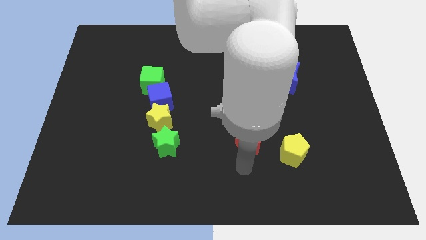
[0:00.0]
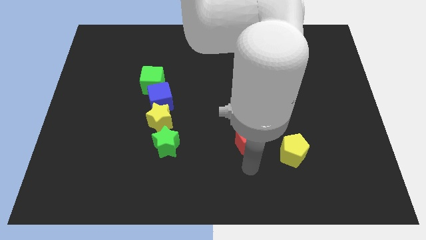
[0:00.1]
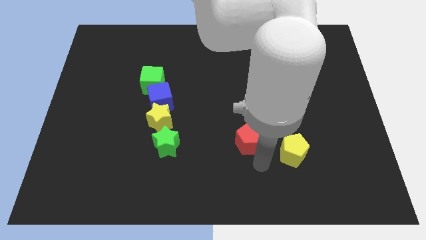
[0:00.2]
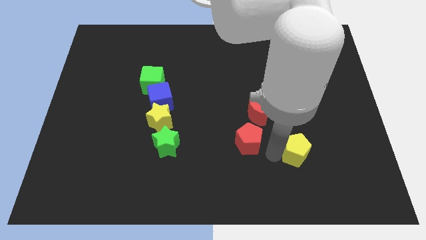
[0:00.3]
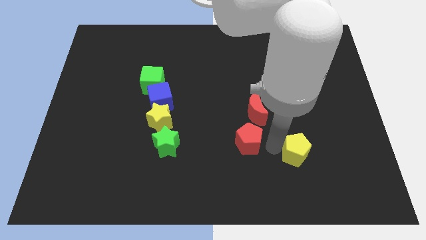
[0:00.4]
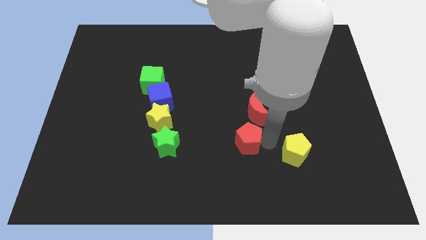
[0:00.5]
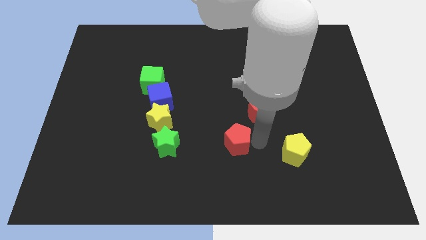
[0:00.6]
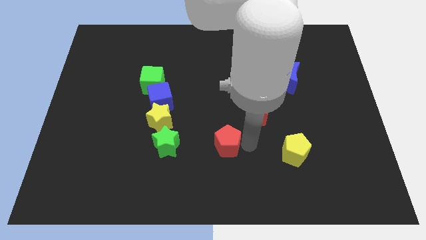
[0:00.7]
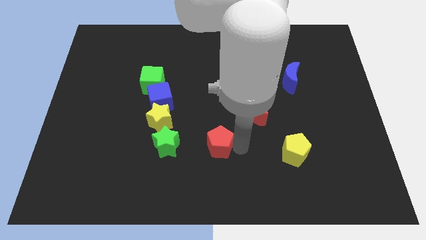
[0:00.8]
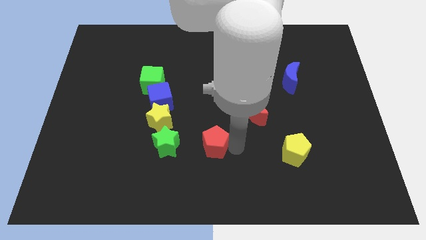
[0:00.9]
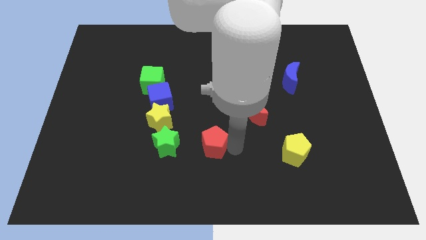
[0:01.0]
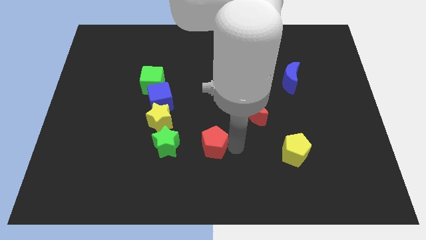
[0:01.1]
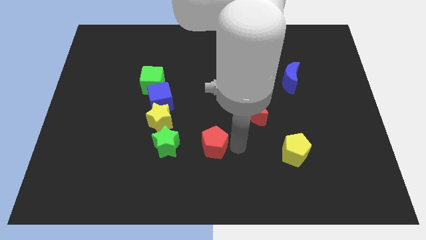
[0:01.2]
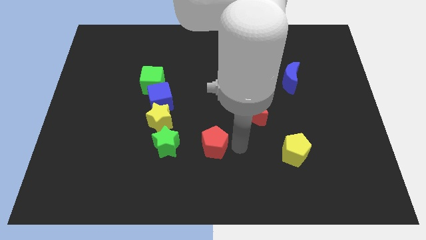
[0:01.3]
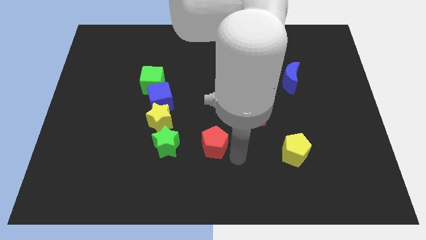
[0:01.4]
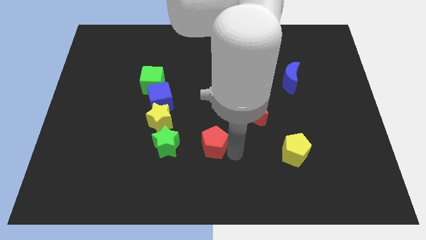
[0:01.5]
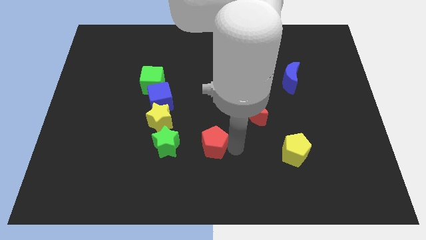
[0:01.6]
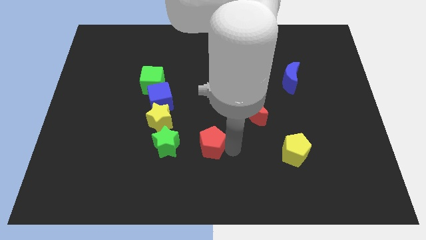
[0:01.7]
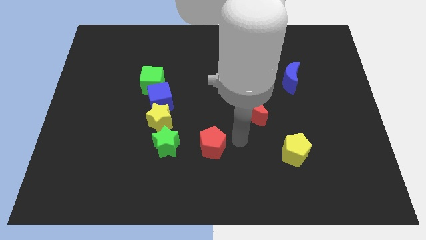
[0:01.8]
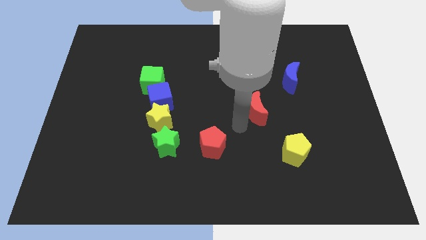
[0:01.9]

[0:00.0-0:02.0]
move the red pentagon to the right of the green star

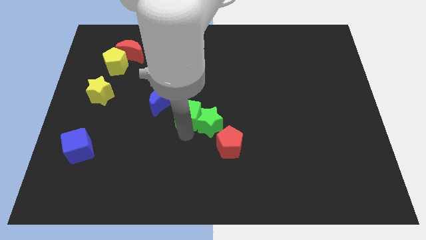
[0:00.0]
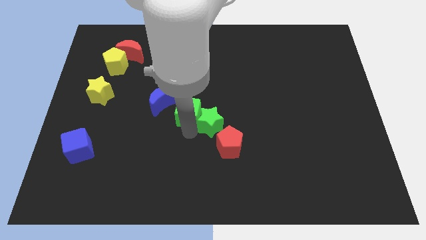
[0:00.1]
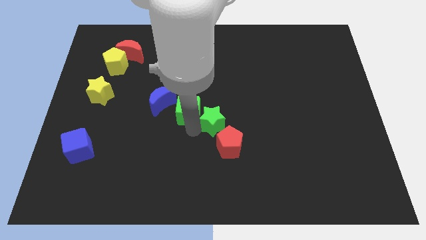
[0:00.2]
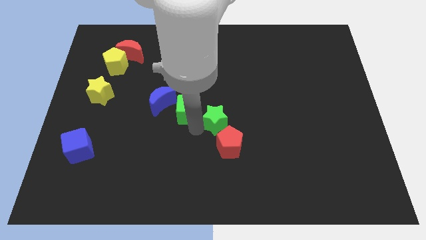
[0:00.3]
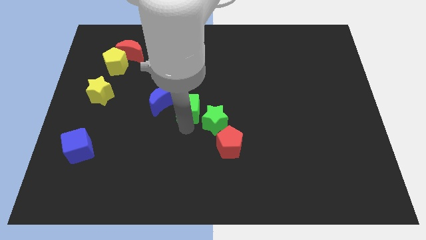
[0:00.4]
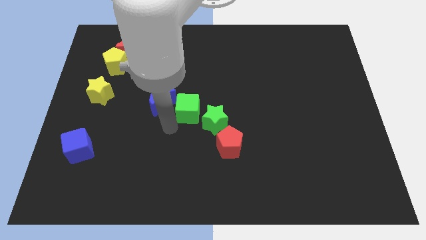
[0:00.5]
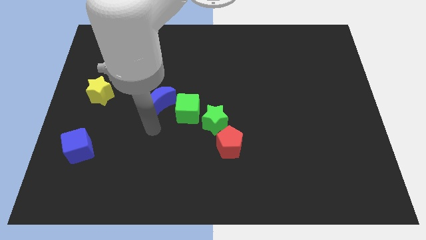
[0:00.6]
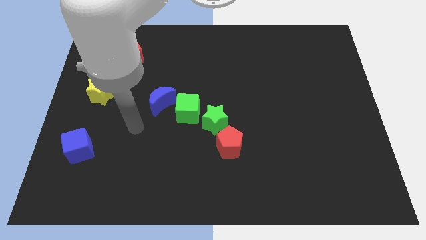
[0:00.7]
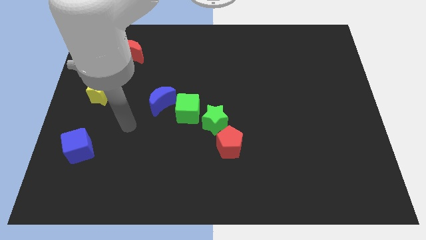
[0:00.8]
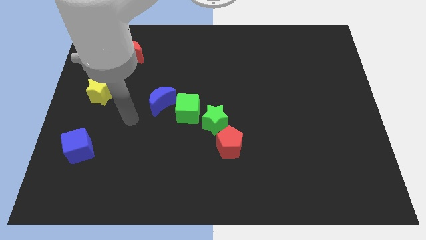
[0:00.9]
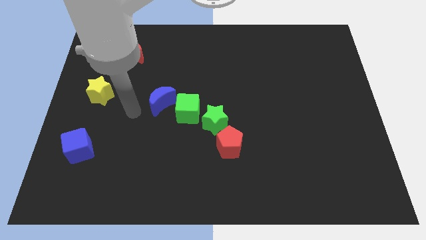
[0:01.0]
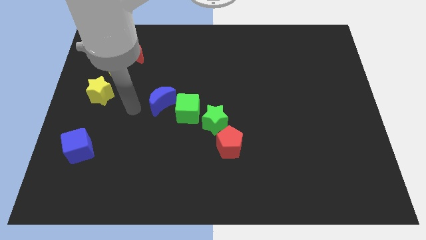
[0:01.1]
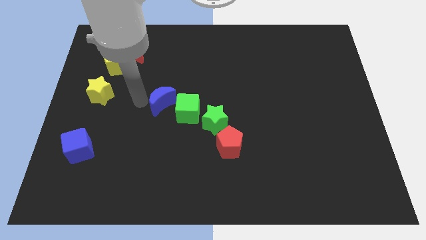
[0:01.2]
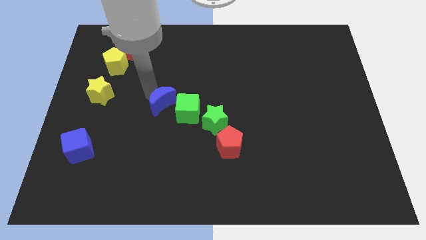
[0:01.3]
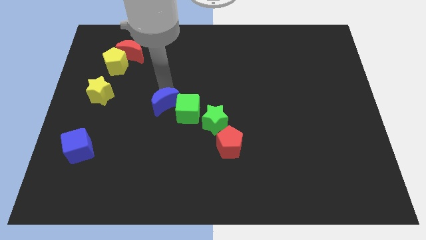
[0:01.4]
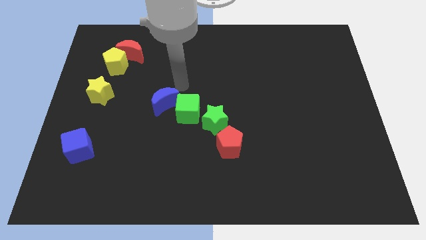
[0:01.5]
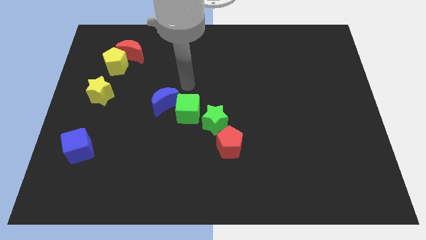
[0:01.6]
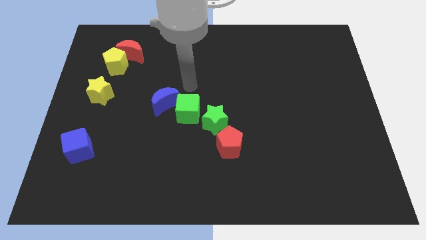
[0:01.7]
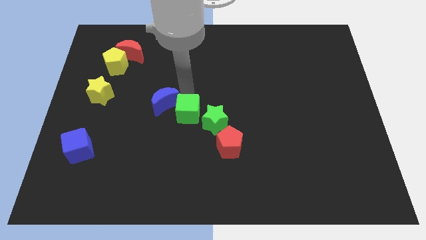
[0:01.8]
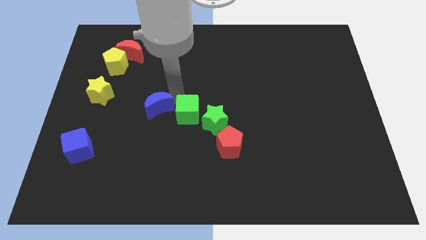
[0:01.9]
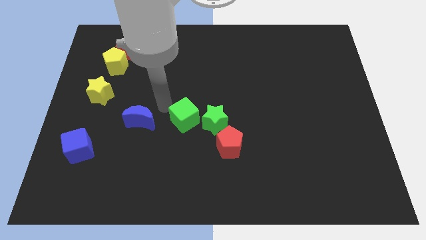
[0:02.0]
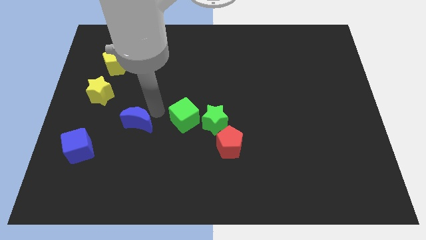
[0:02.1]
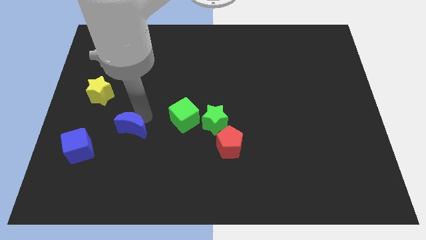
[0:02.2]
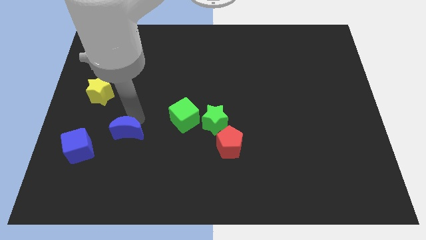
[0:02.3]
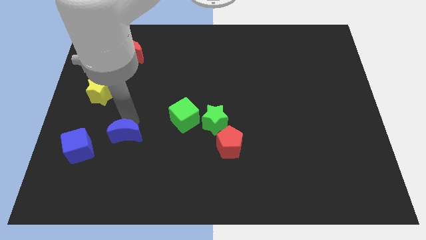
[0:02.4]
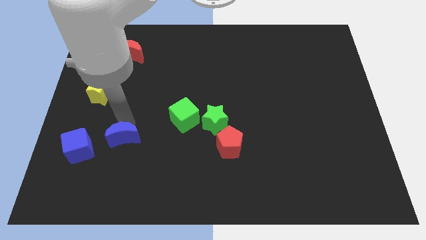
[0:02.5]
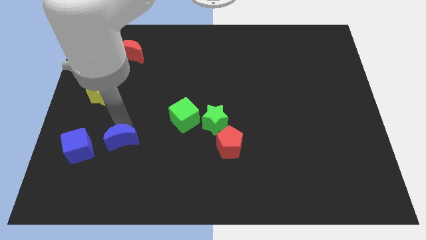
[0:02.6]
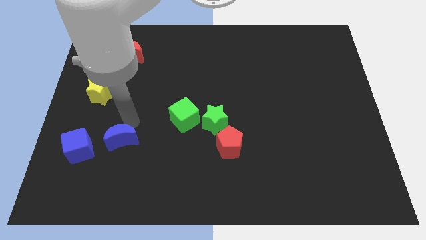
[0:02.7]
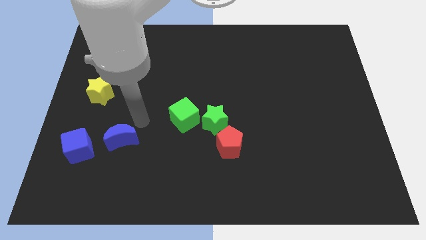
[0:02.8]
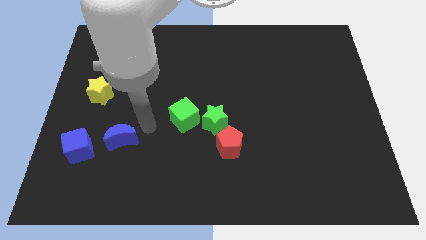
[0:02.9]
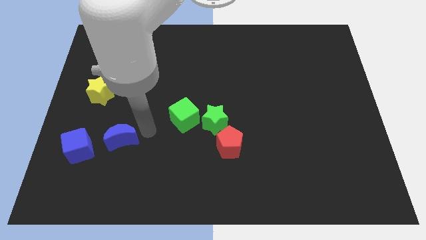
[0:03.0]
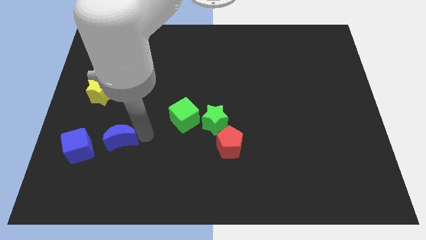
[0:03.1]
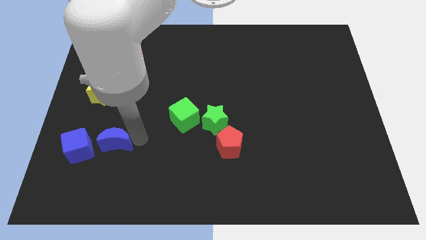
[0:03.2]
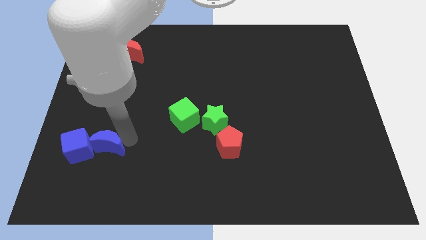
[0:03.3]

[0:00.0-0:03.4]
slide the blue crescent into the blue moon

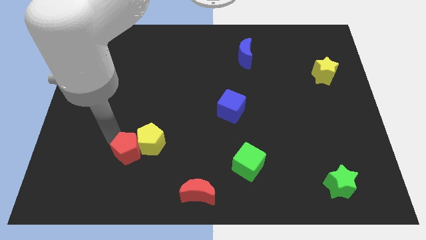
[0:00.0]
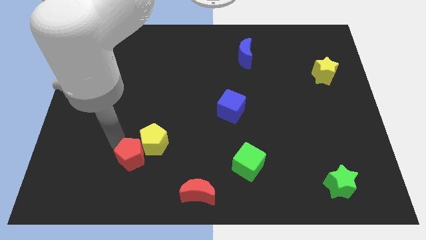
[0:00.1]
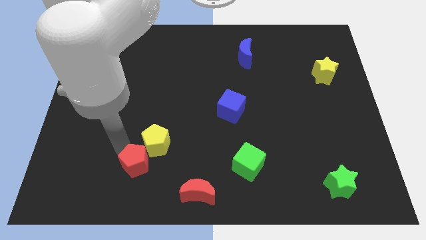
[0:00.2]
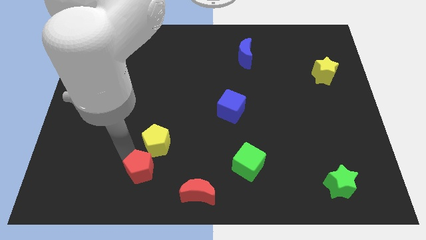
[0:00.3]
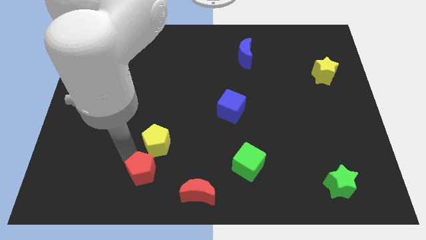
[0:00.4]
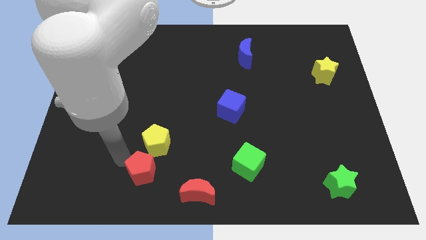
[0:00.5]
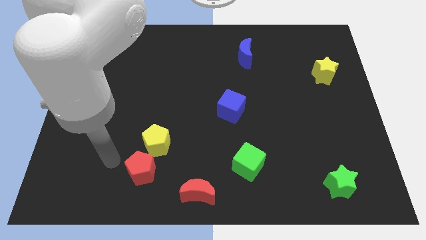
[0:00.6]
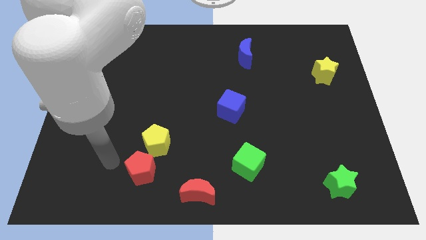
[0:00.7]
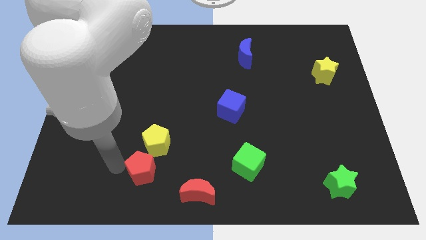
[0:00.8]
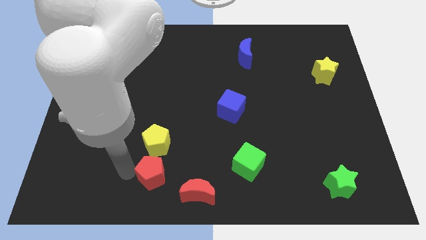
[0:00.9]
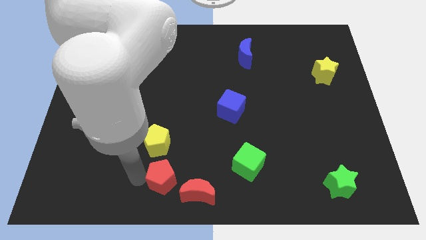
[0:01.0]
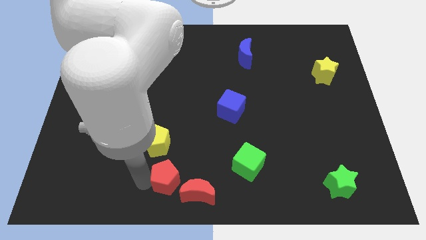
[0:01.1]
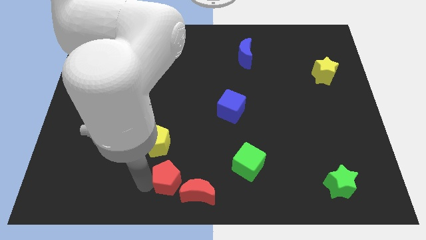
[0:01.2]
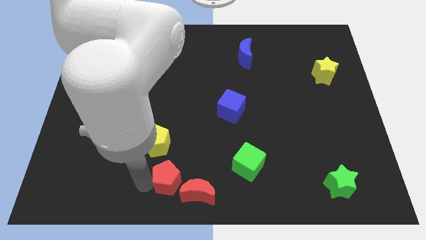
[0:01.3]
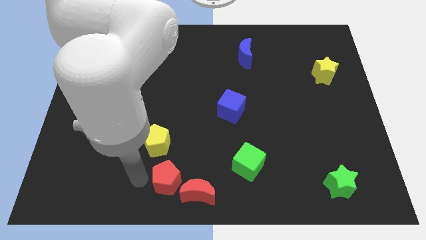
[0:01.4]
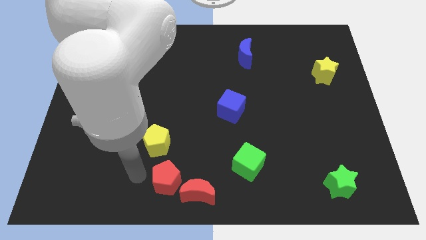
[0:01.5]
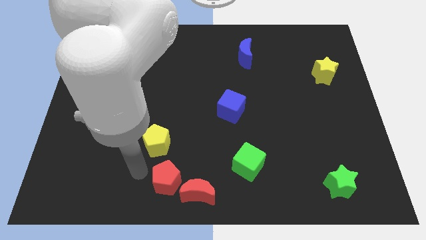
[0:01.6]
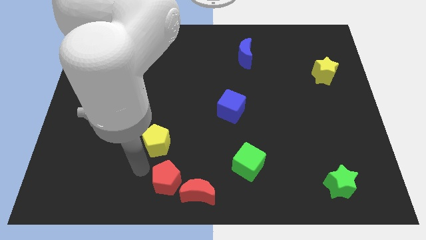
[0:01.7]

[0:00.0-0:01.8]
separate the red pentagon from the yellow pentagon

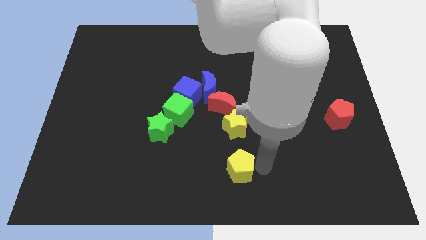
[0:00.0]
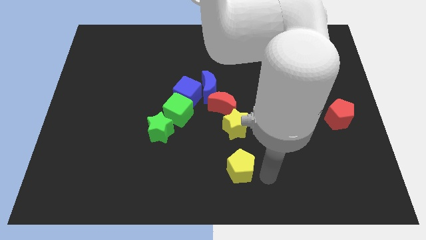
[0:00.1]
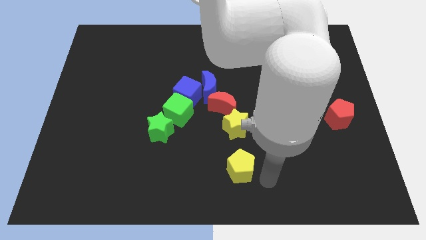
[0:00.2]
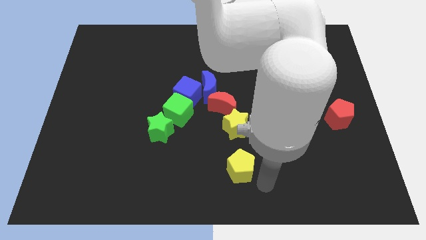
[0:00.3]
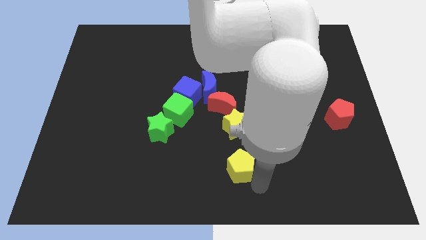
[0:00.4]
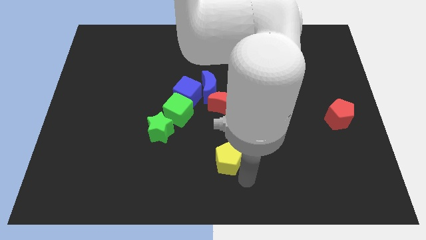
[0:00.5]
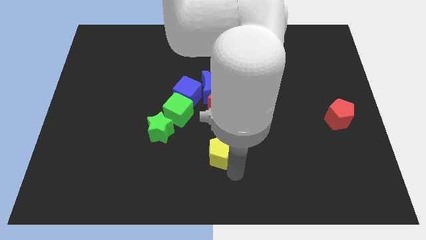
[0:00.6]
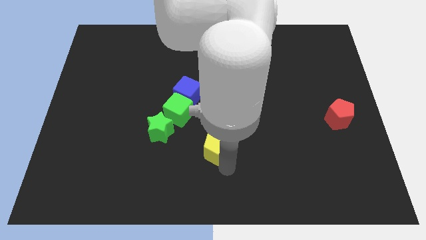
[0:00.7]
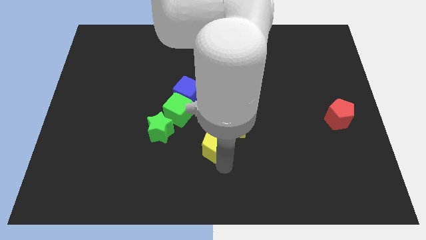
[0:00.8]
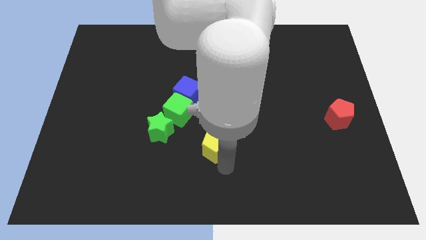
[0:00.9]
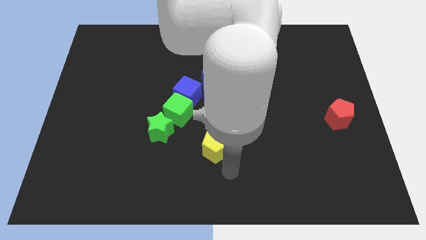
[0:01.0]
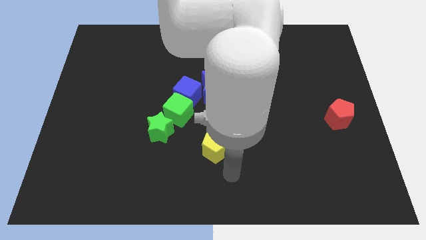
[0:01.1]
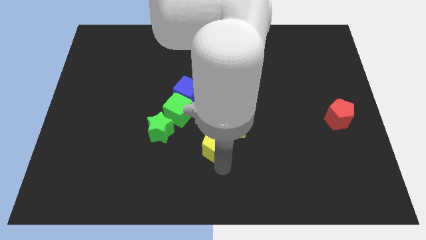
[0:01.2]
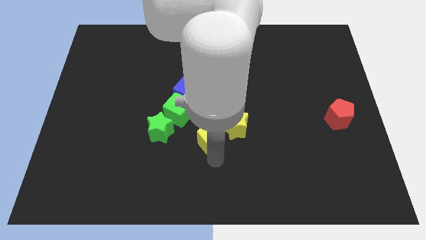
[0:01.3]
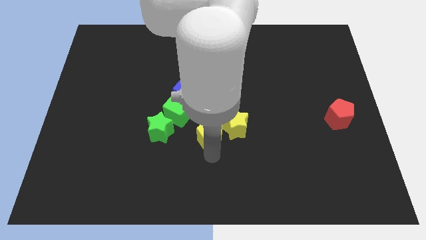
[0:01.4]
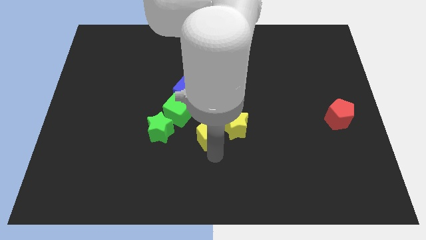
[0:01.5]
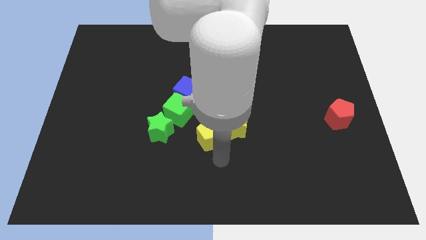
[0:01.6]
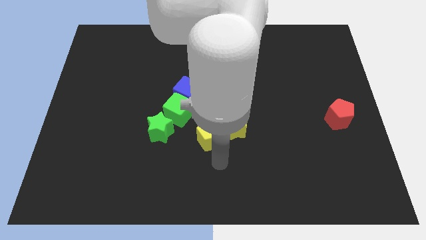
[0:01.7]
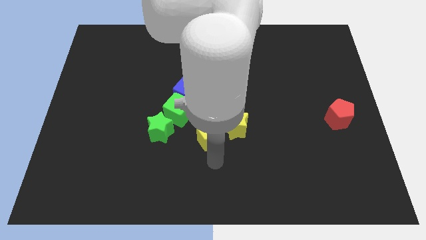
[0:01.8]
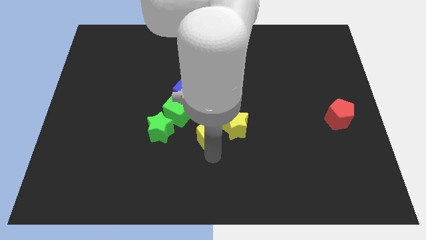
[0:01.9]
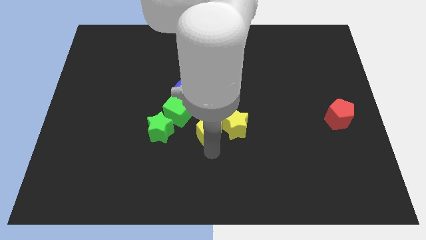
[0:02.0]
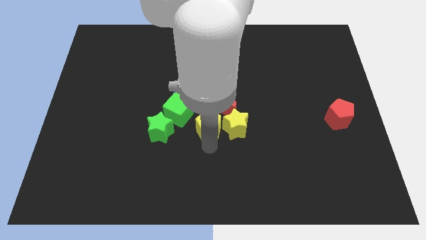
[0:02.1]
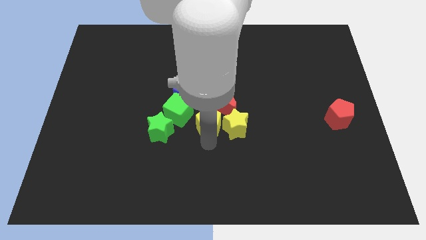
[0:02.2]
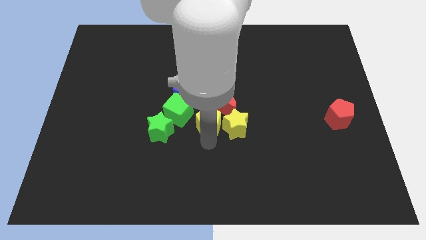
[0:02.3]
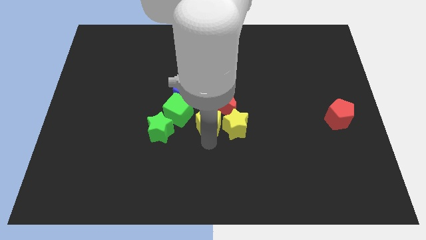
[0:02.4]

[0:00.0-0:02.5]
place yellow pentagon in between green cube and yellow star
